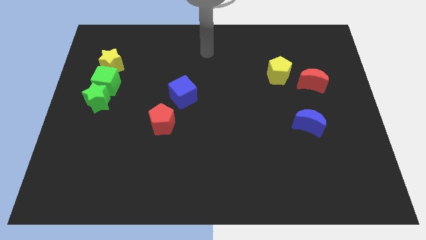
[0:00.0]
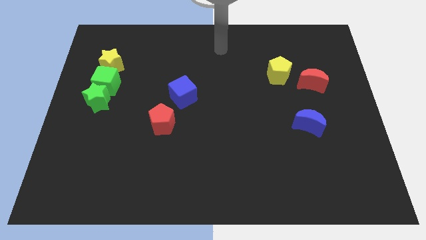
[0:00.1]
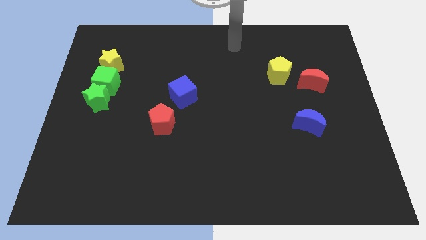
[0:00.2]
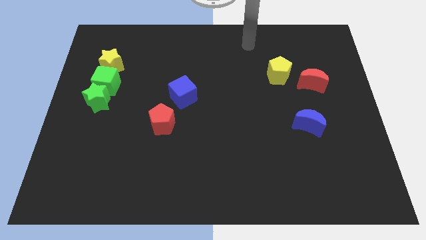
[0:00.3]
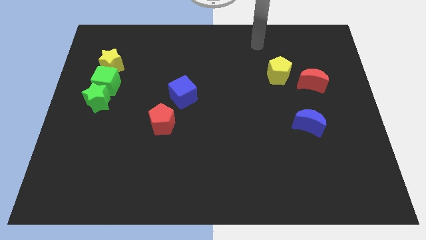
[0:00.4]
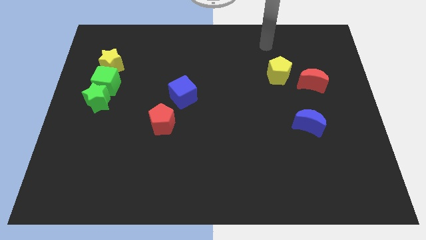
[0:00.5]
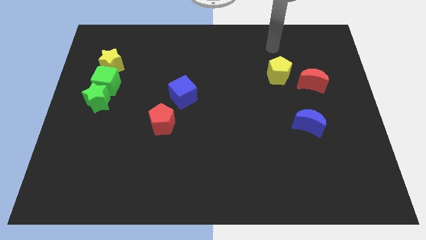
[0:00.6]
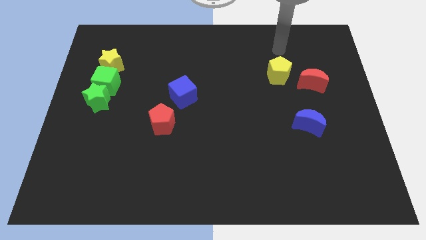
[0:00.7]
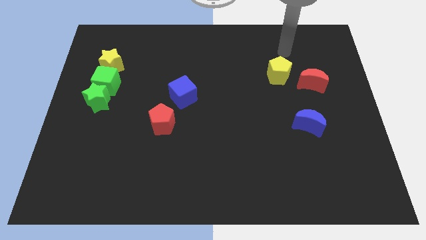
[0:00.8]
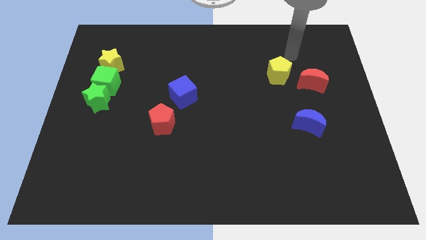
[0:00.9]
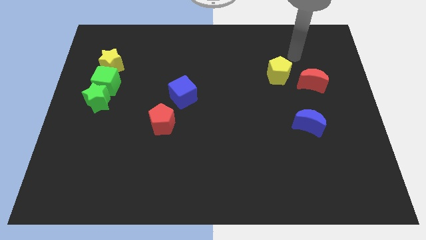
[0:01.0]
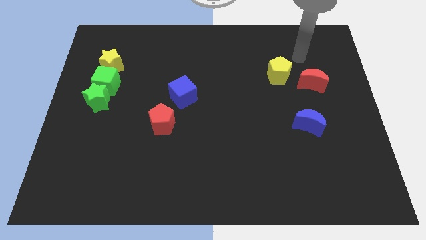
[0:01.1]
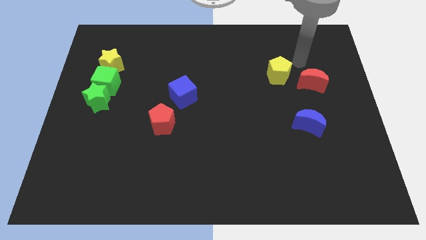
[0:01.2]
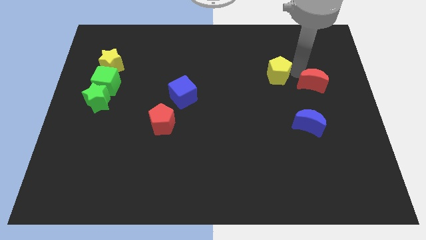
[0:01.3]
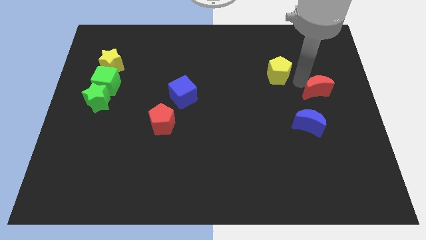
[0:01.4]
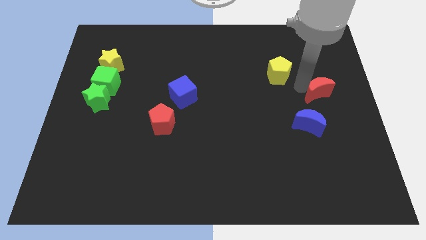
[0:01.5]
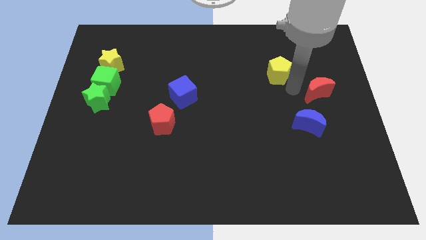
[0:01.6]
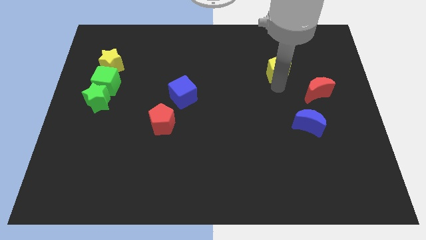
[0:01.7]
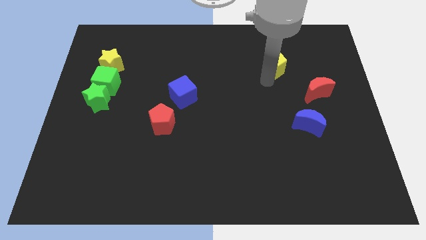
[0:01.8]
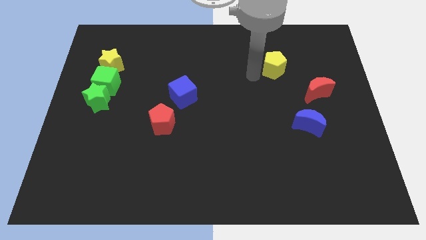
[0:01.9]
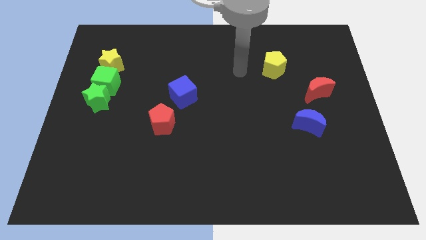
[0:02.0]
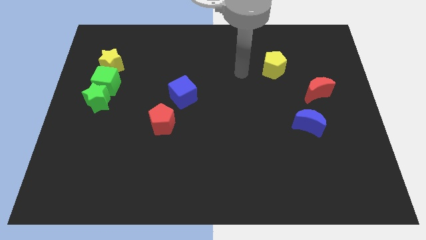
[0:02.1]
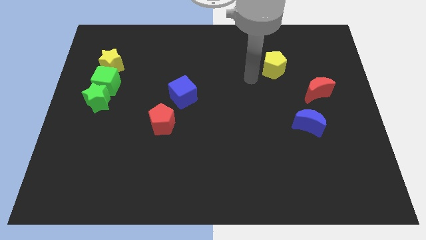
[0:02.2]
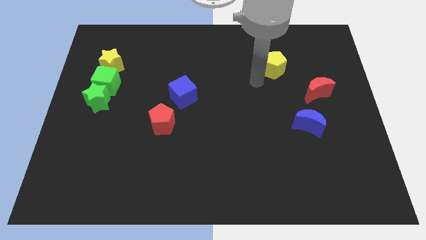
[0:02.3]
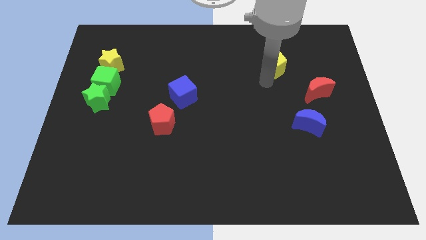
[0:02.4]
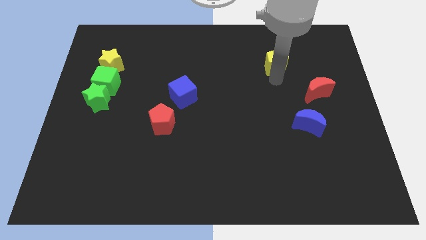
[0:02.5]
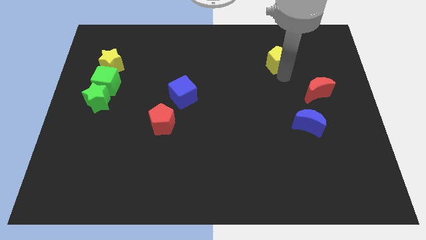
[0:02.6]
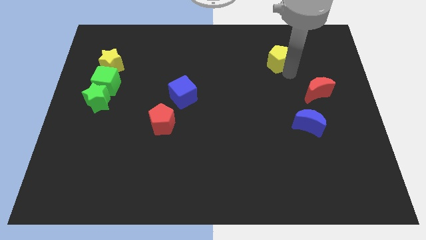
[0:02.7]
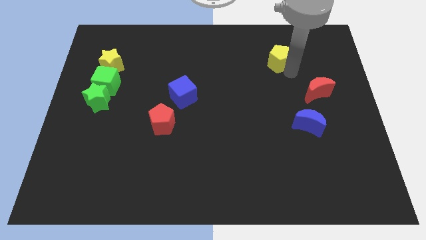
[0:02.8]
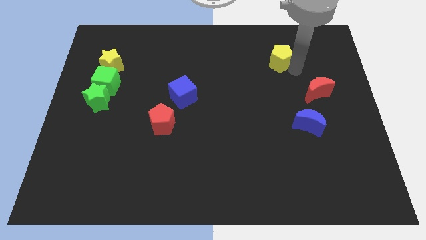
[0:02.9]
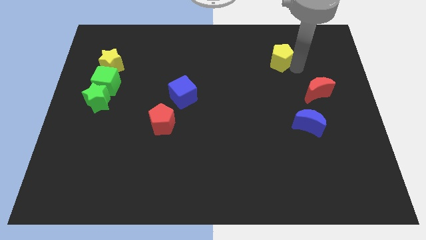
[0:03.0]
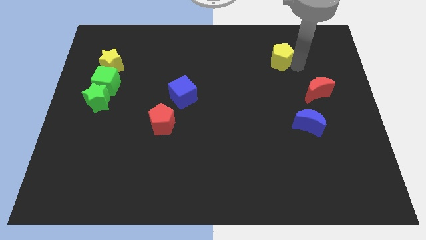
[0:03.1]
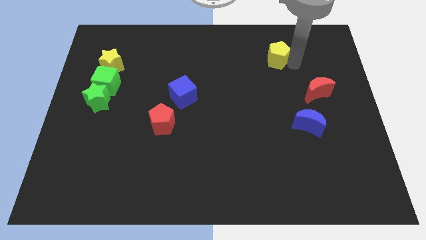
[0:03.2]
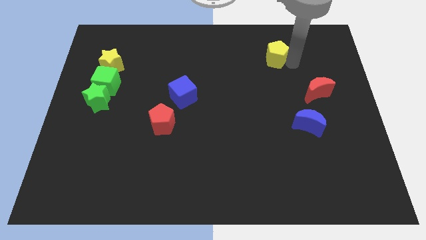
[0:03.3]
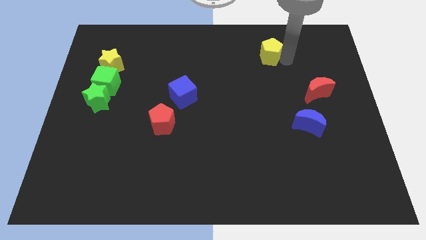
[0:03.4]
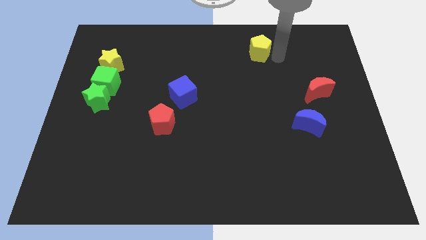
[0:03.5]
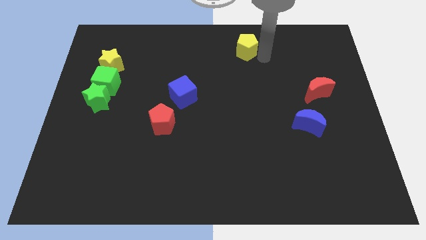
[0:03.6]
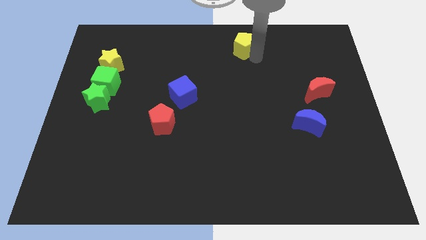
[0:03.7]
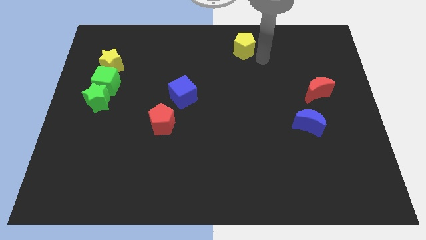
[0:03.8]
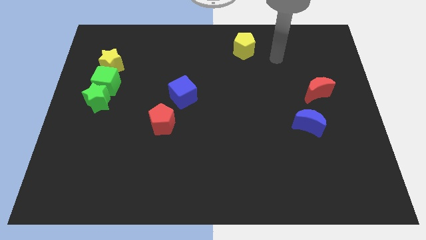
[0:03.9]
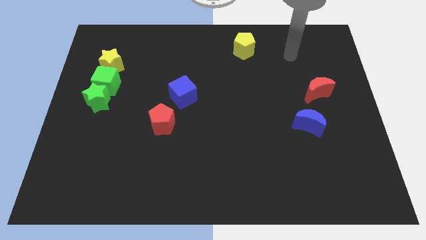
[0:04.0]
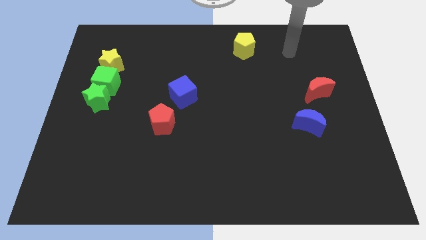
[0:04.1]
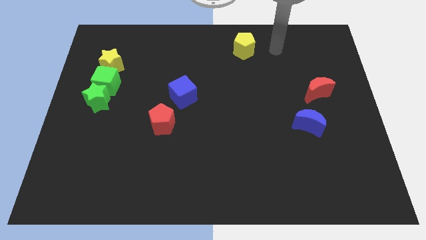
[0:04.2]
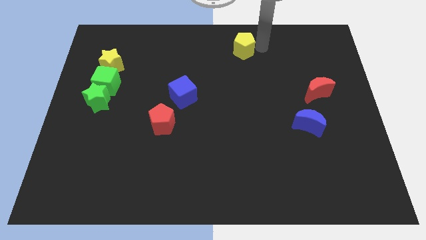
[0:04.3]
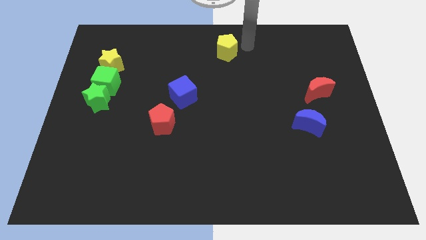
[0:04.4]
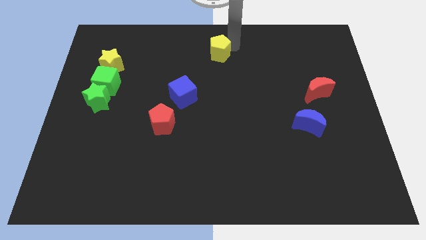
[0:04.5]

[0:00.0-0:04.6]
move the yellow pentagon to the top center

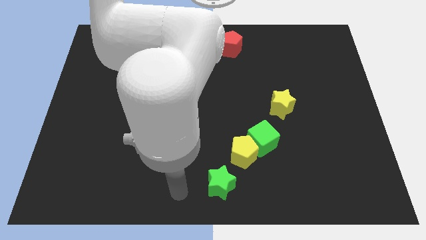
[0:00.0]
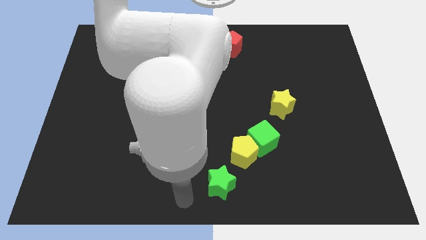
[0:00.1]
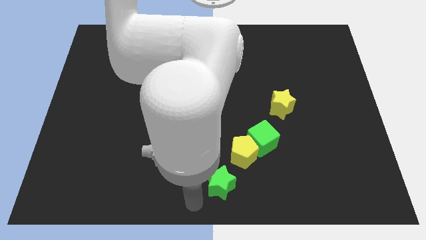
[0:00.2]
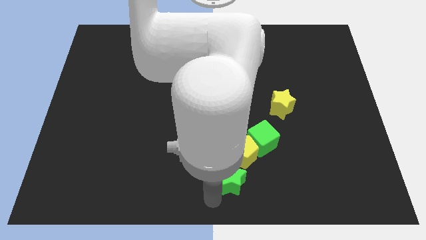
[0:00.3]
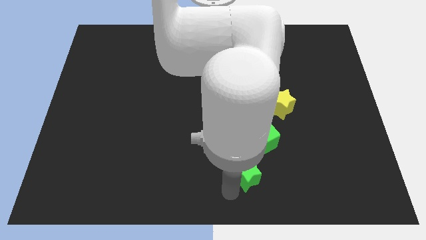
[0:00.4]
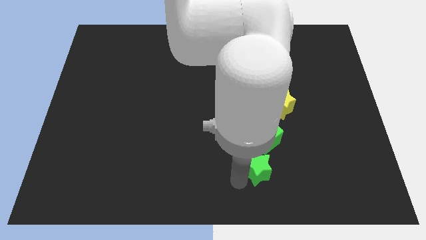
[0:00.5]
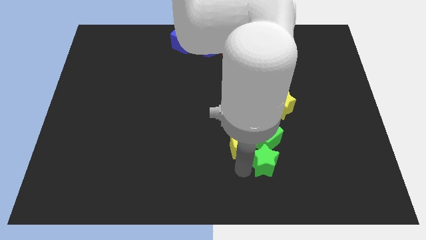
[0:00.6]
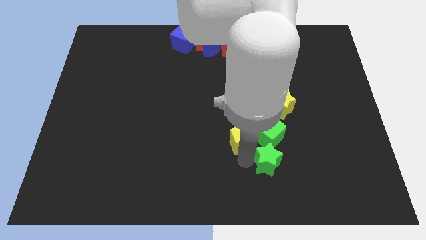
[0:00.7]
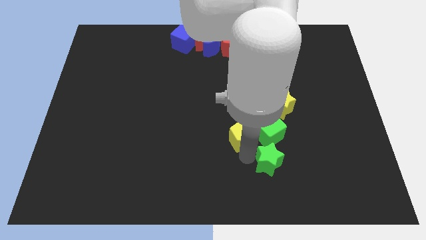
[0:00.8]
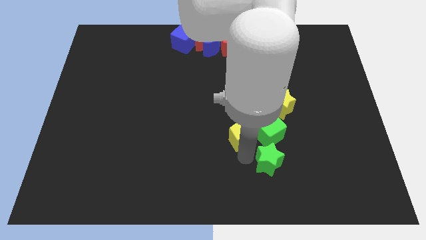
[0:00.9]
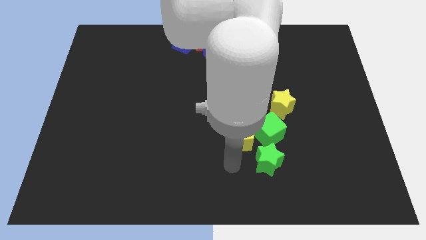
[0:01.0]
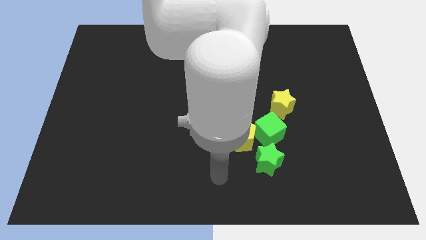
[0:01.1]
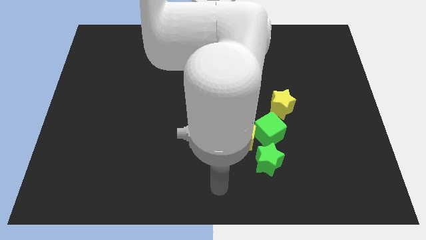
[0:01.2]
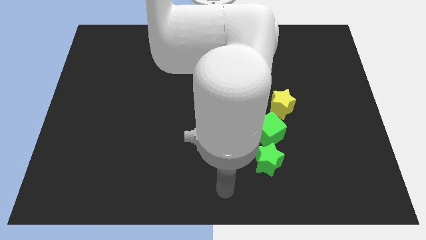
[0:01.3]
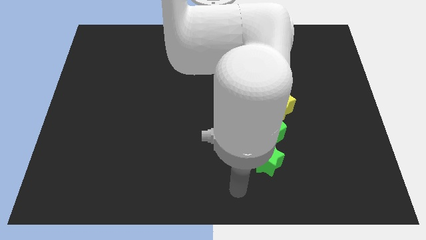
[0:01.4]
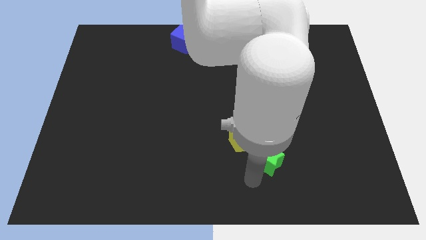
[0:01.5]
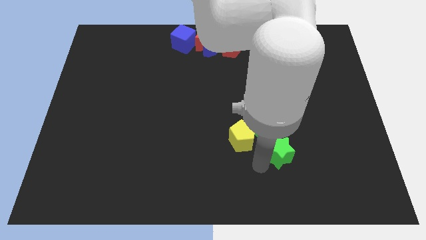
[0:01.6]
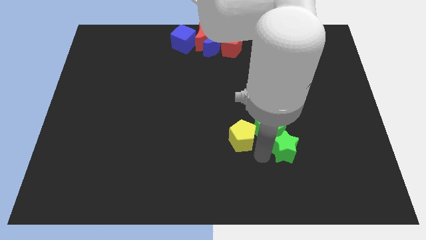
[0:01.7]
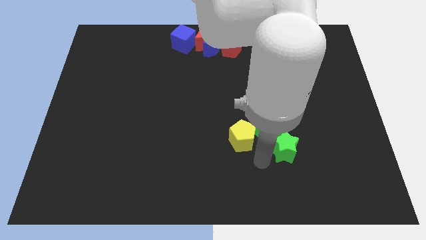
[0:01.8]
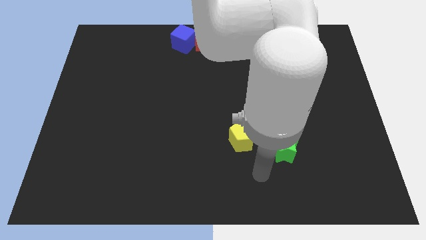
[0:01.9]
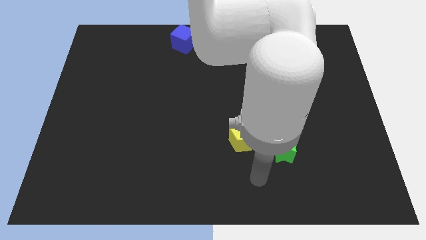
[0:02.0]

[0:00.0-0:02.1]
move the green star into the yellow pentagon and green cube

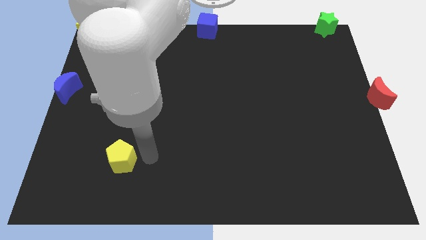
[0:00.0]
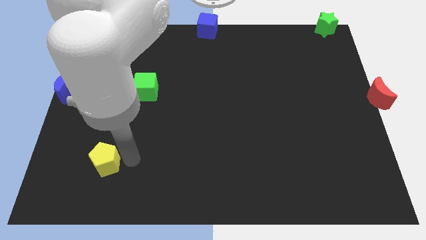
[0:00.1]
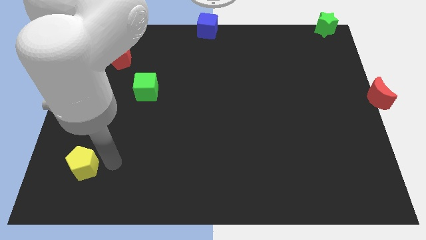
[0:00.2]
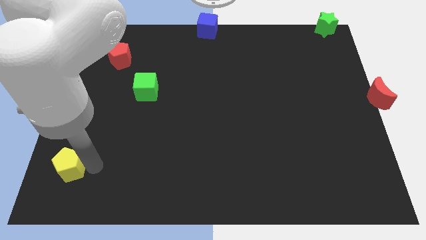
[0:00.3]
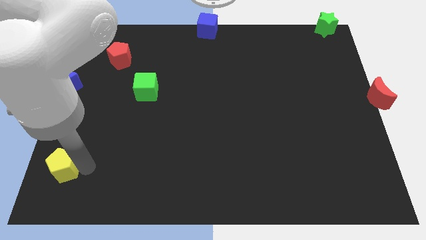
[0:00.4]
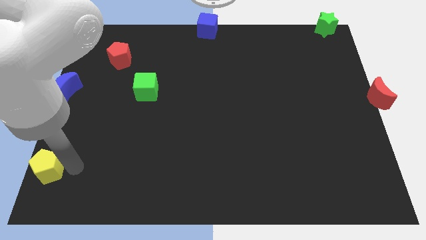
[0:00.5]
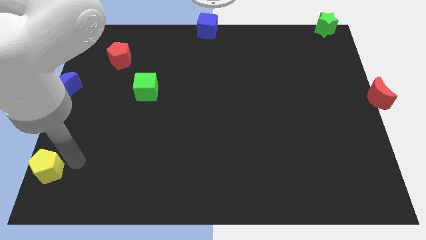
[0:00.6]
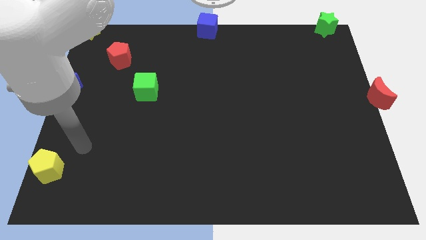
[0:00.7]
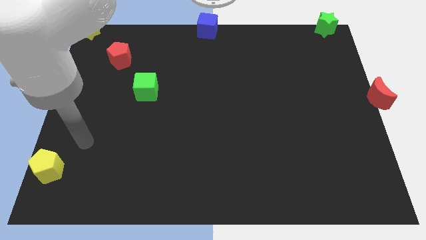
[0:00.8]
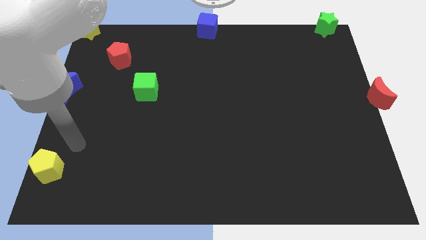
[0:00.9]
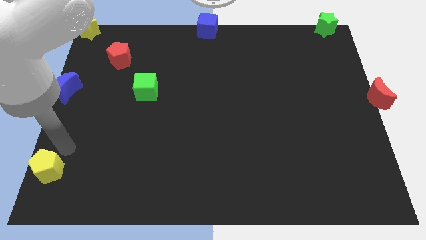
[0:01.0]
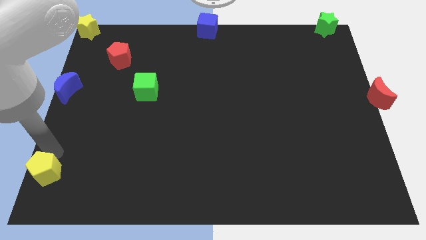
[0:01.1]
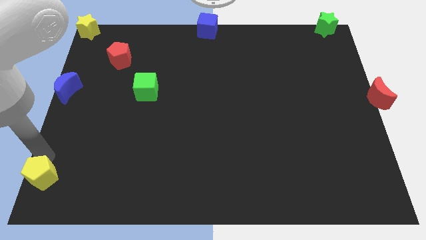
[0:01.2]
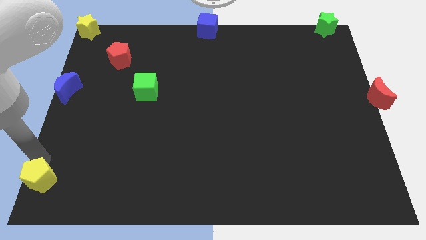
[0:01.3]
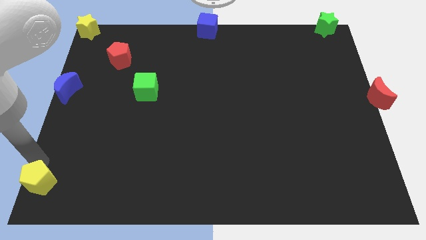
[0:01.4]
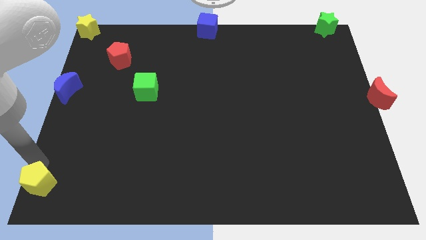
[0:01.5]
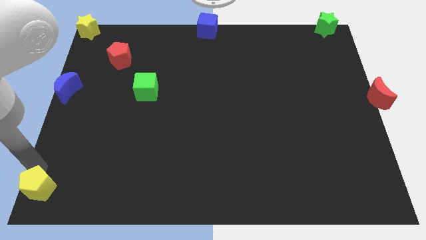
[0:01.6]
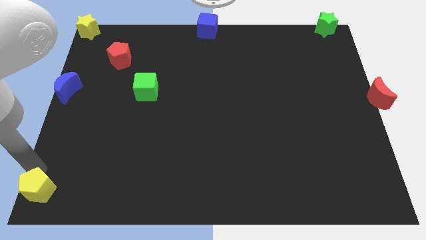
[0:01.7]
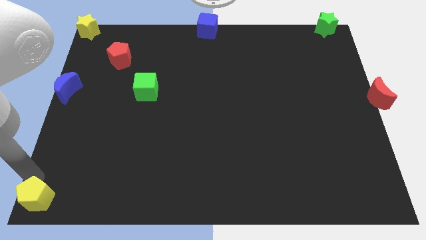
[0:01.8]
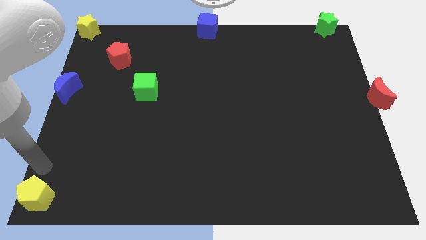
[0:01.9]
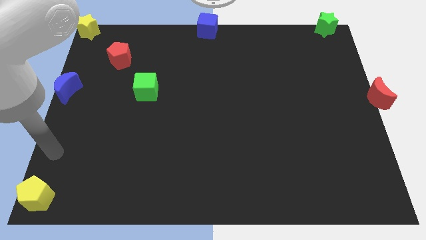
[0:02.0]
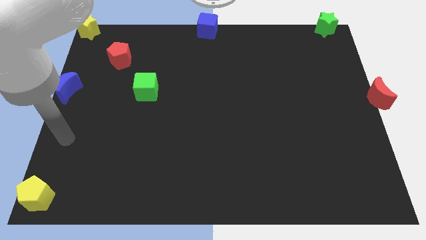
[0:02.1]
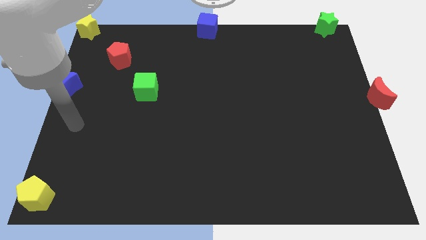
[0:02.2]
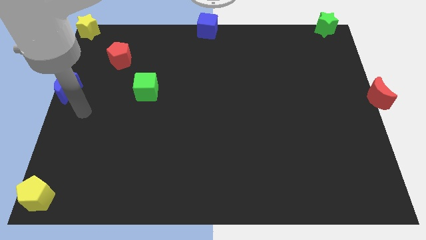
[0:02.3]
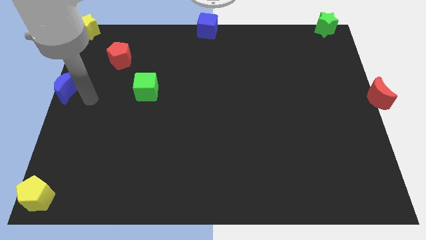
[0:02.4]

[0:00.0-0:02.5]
move yellow pentagon towards bottom left corner of the board
